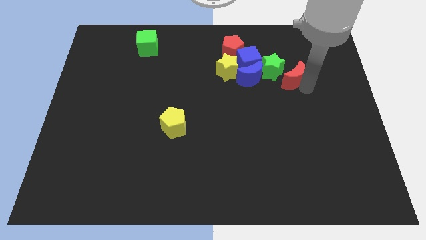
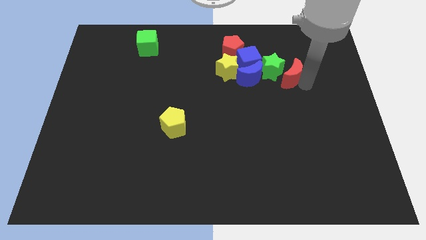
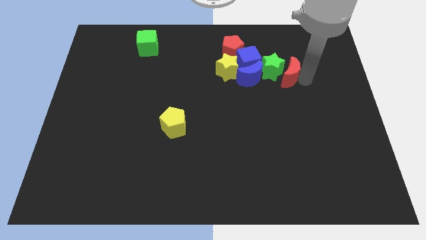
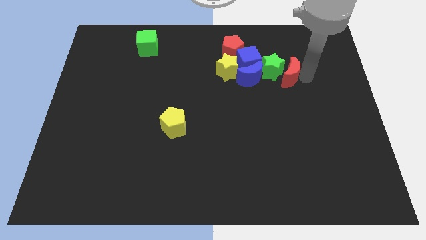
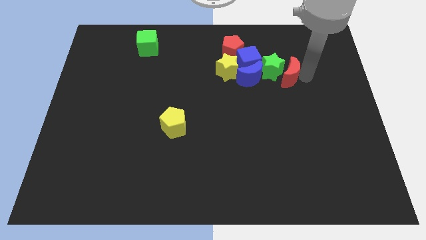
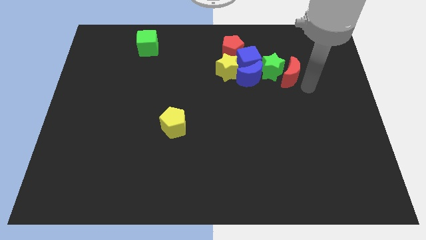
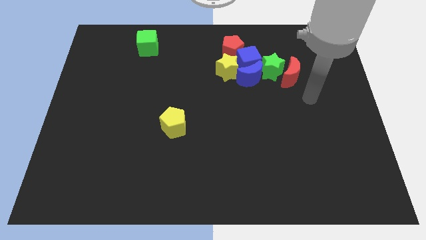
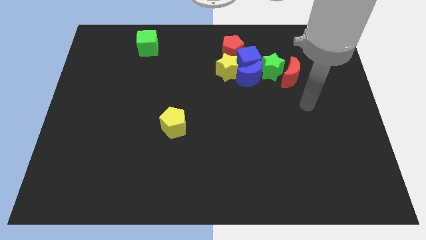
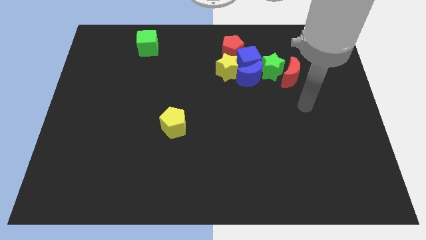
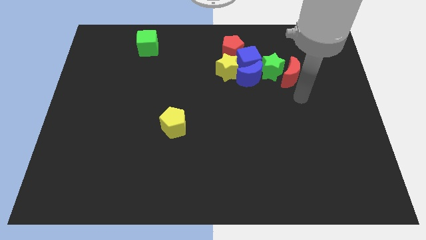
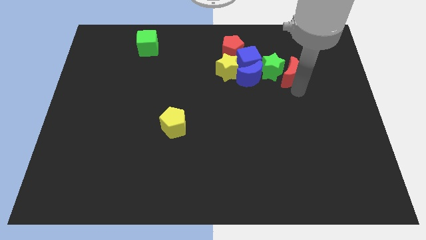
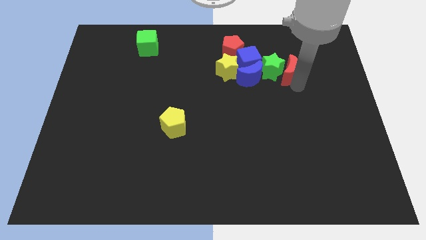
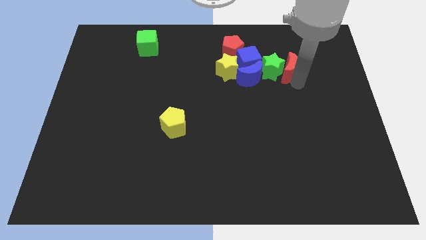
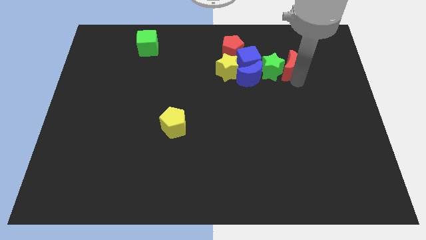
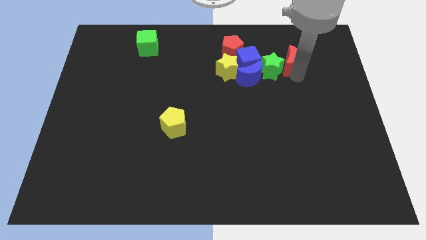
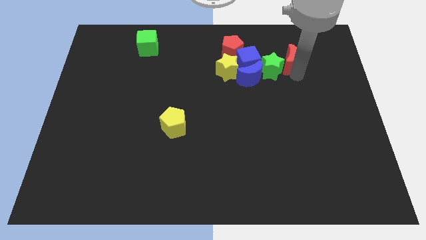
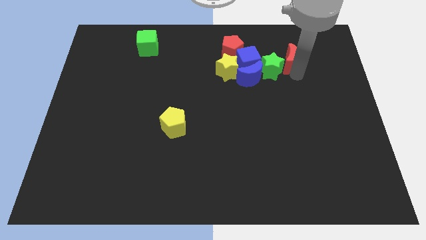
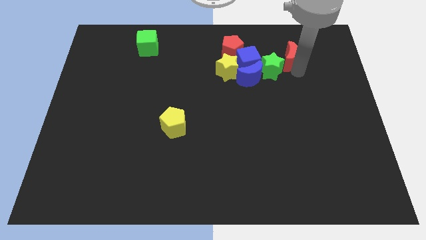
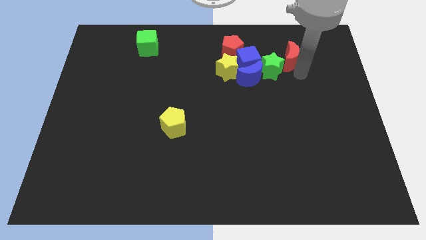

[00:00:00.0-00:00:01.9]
move the red moon close to the green star

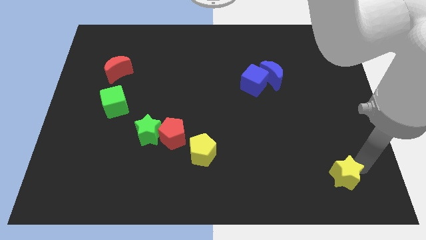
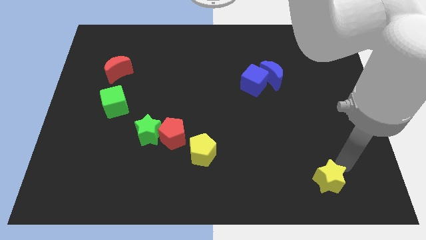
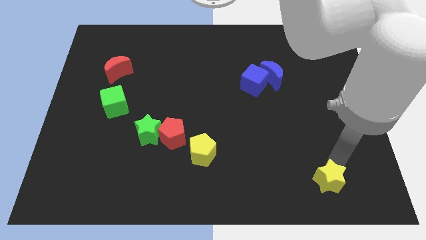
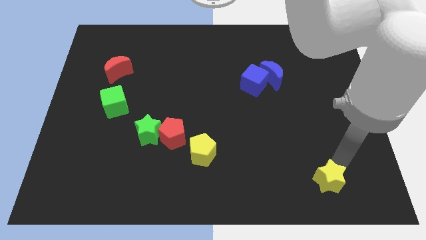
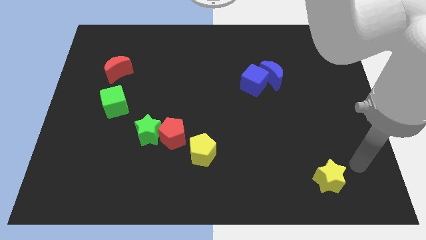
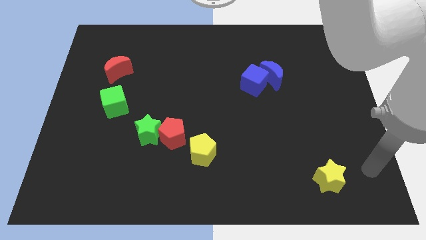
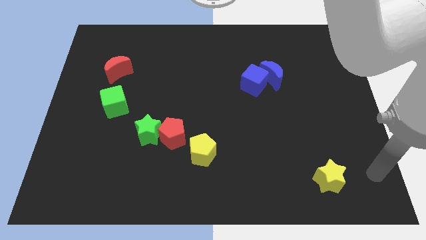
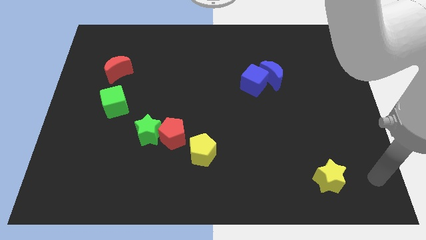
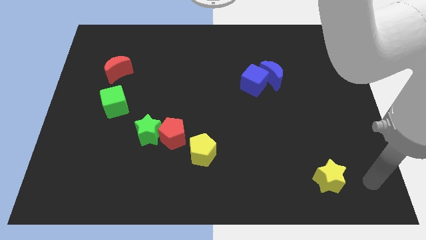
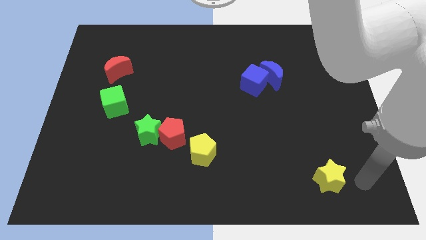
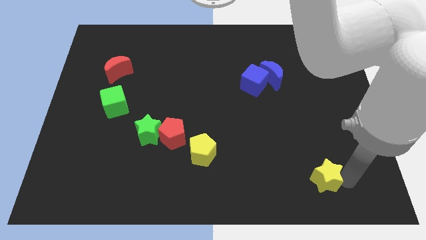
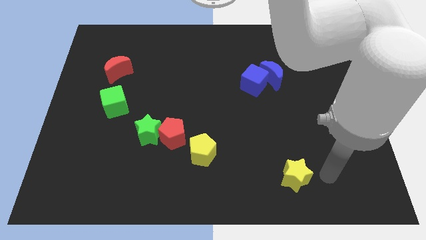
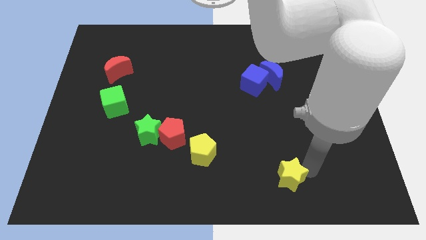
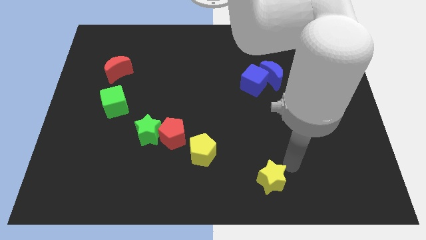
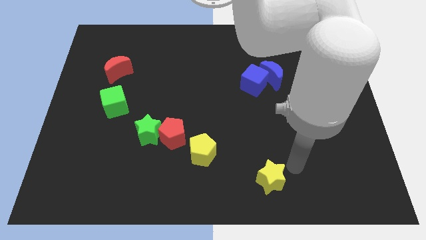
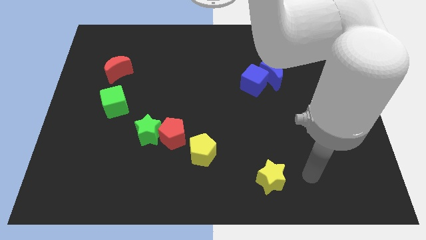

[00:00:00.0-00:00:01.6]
push the yellow star closer to the yellow pentagon

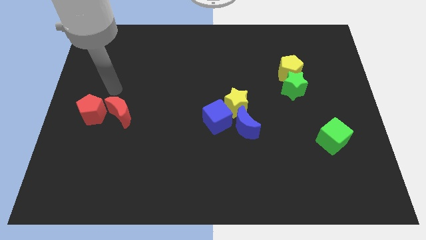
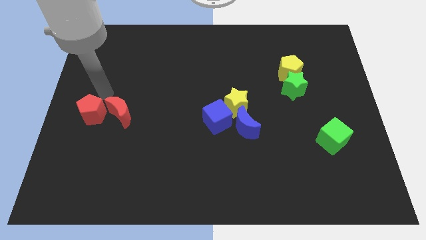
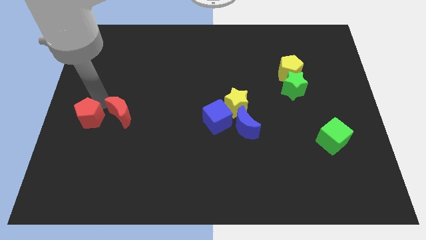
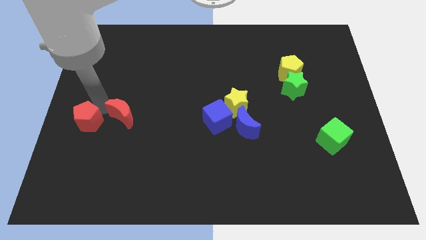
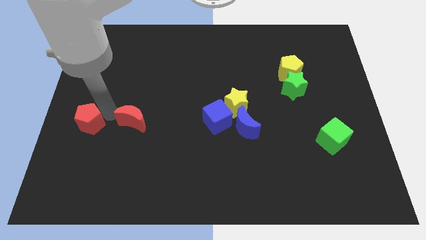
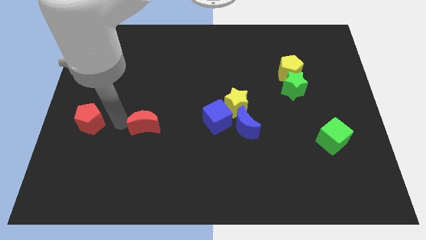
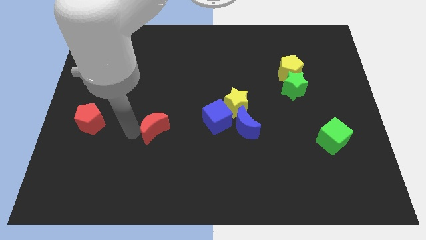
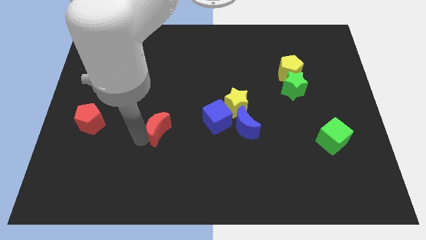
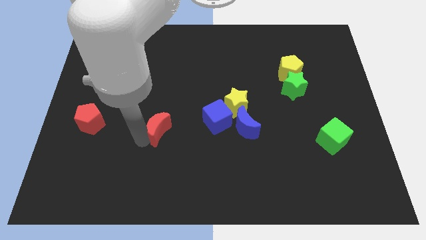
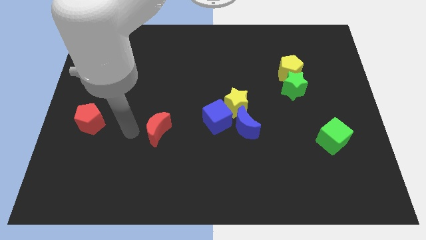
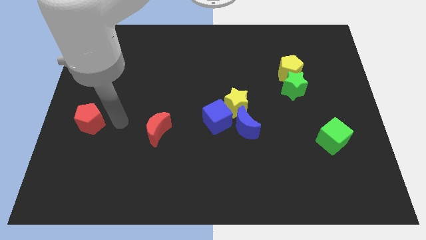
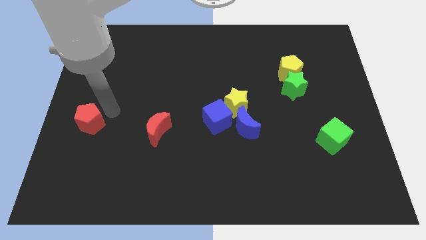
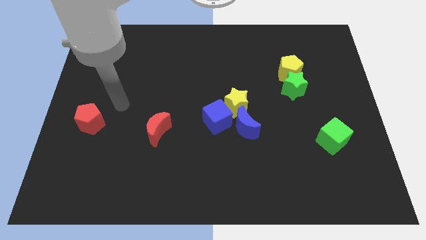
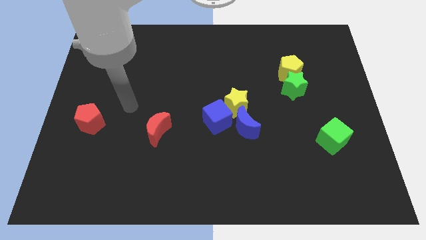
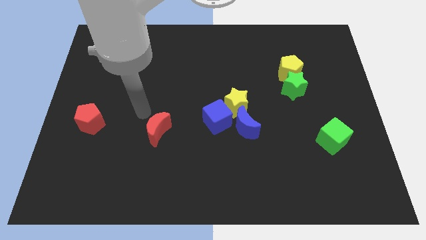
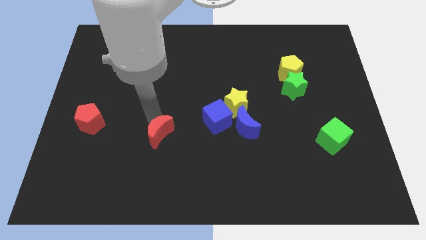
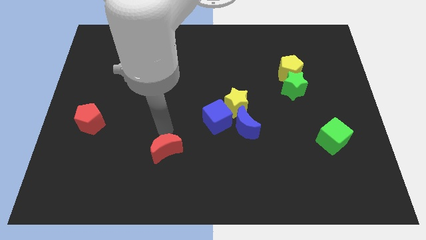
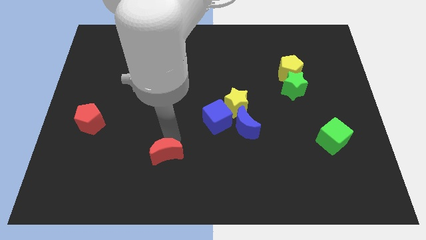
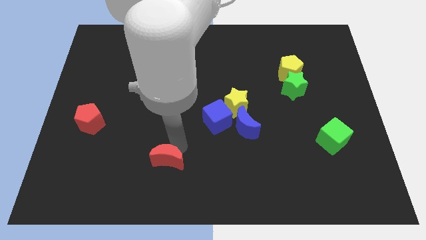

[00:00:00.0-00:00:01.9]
separate the red crescent from the red pentagon

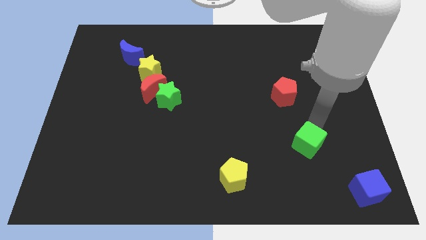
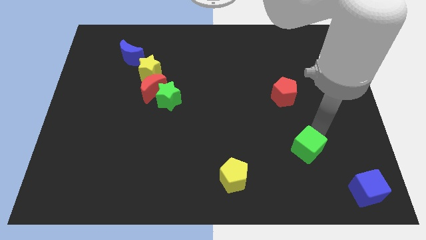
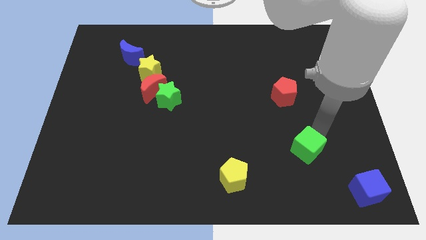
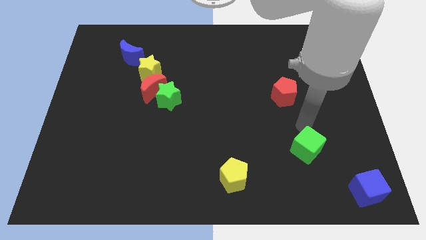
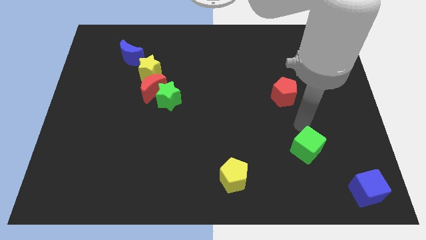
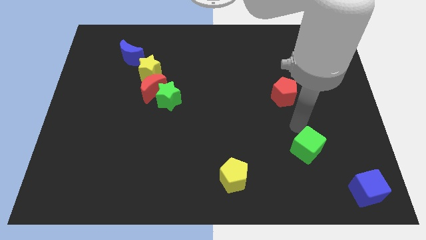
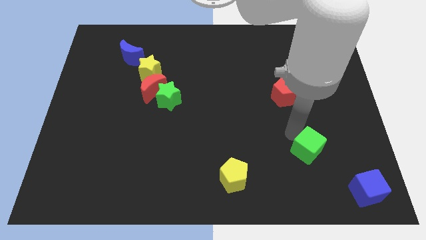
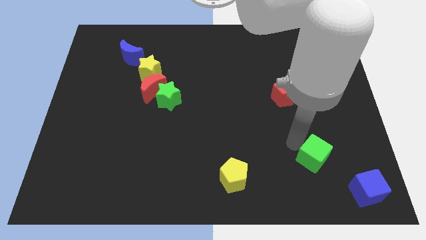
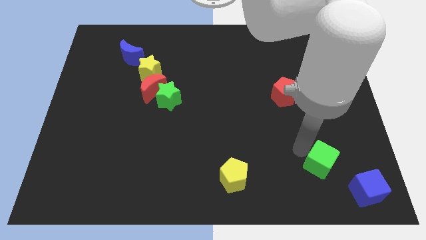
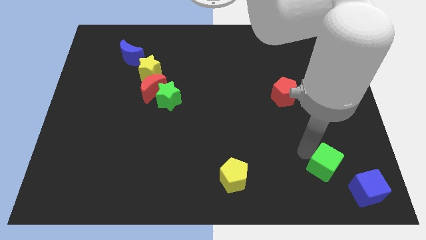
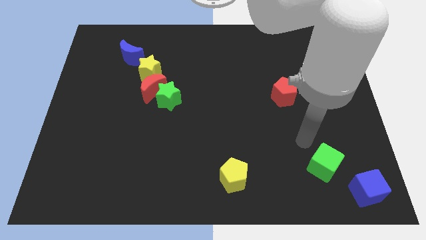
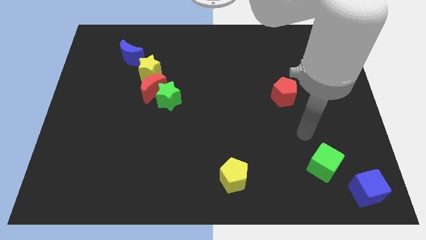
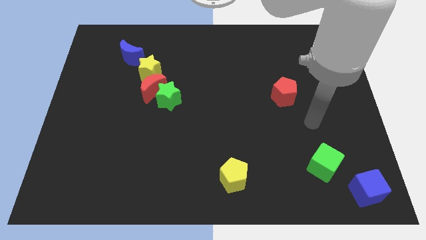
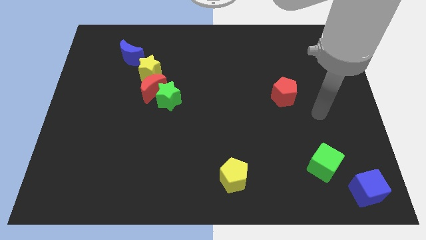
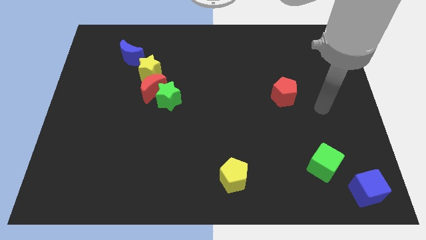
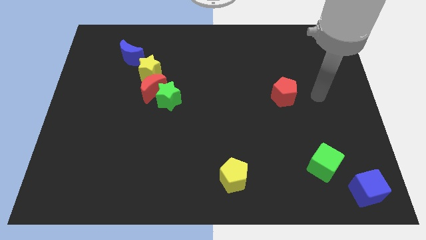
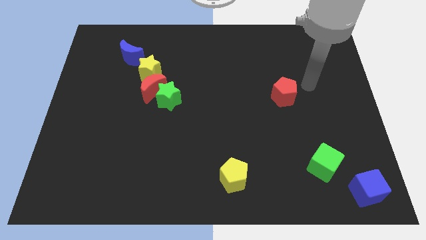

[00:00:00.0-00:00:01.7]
move the green cube towards the blue cube

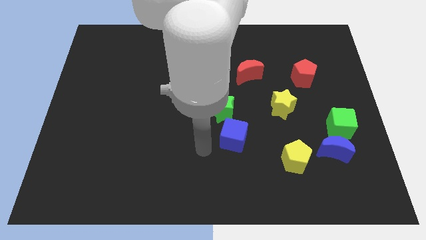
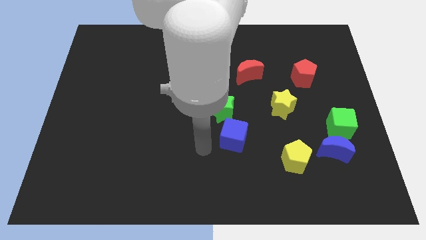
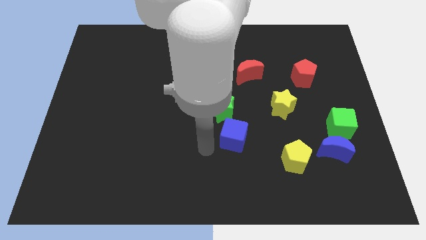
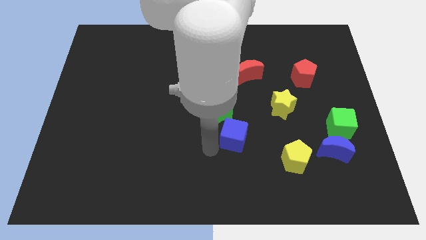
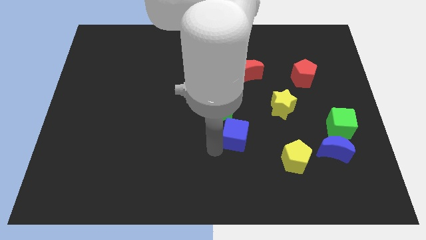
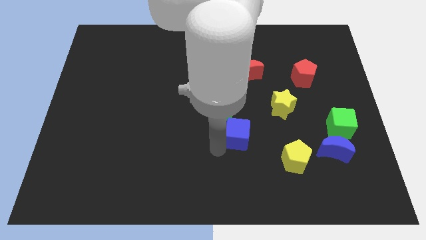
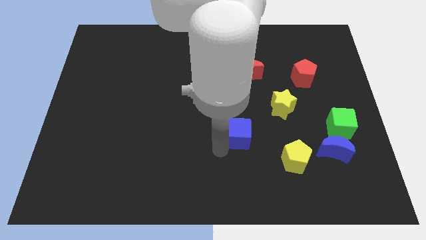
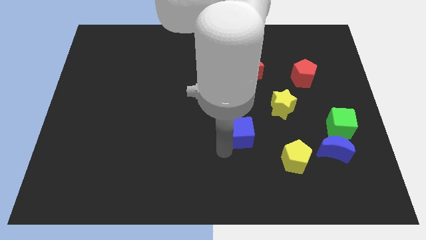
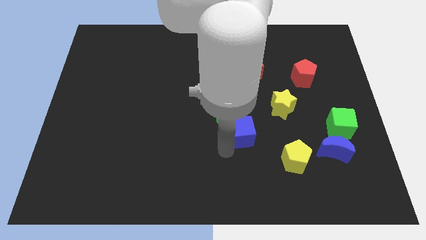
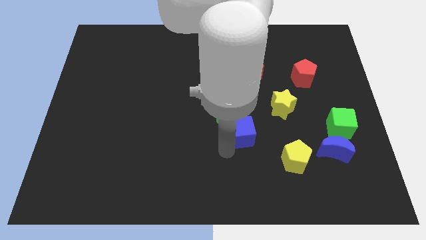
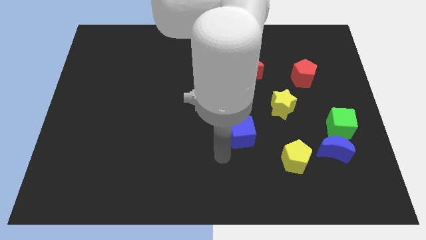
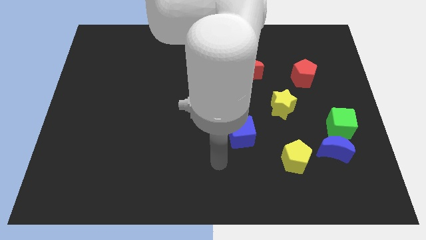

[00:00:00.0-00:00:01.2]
slightly move the blue cube towards the right

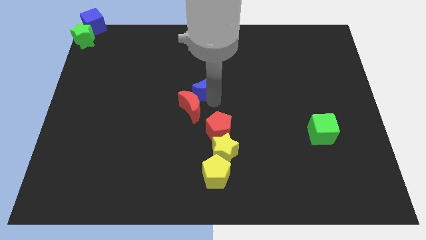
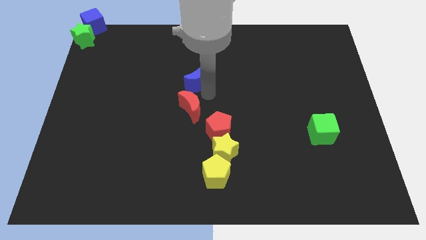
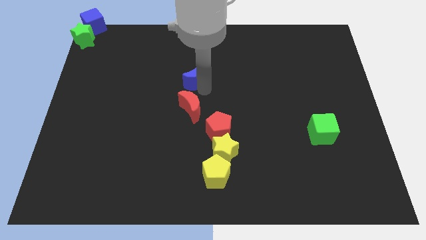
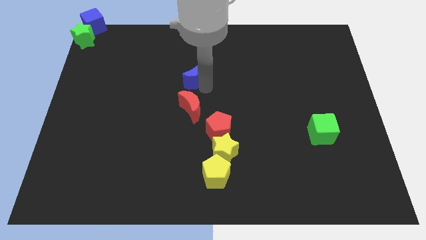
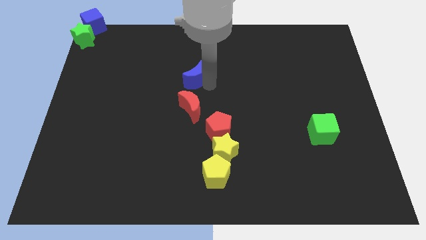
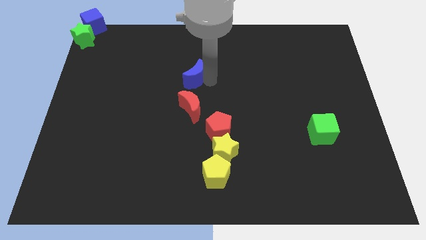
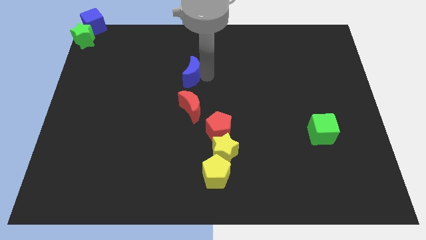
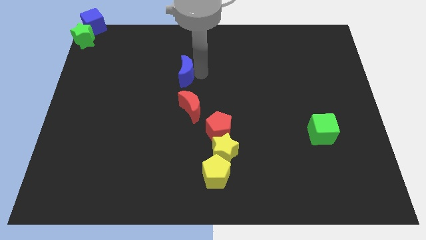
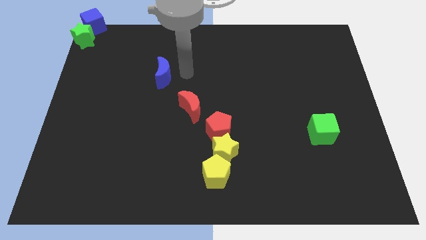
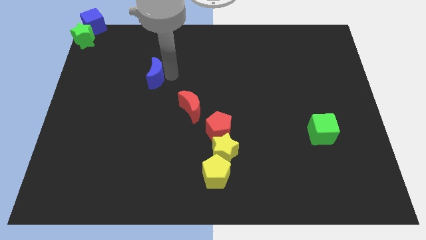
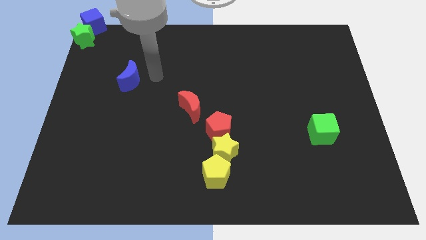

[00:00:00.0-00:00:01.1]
place blue moon diagonally between red moon and green star
